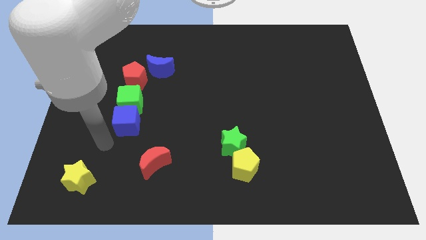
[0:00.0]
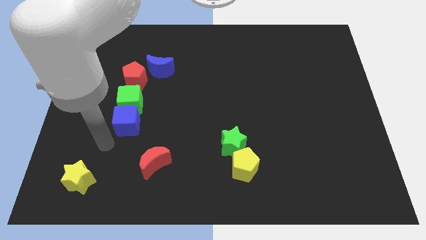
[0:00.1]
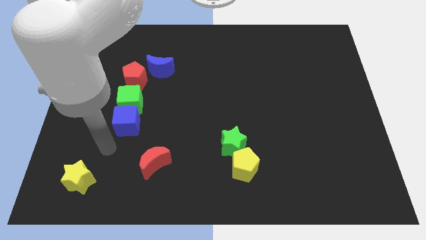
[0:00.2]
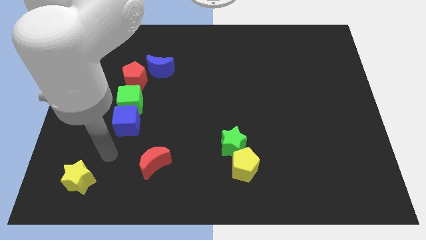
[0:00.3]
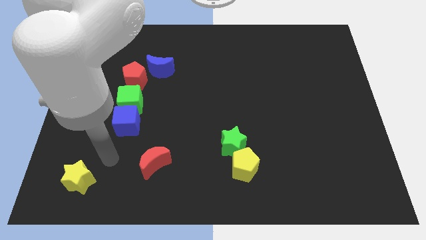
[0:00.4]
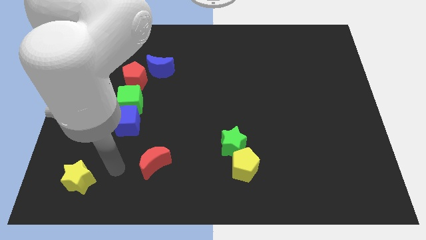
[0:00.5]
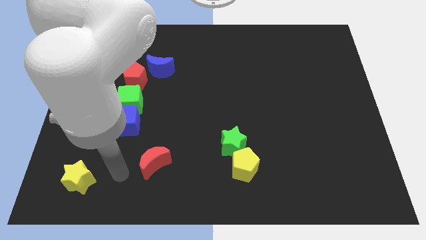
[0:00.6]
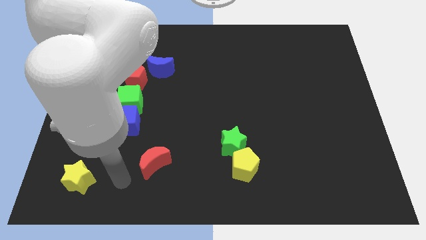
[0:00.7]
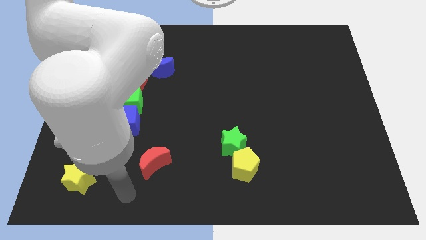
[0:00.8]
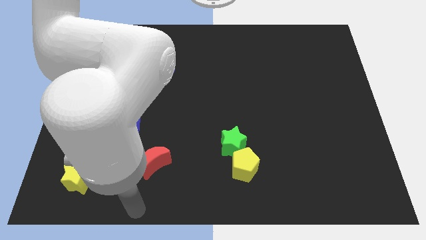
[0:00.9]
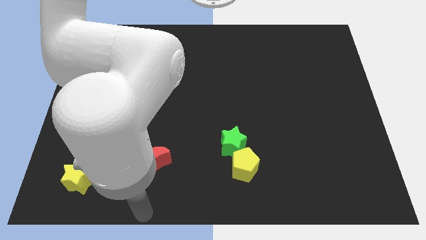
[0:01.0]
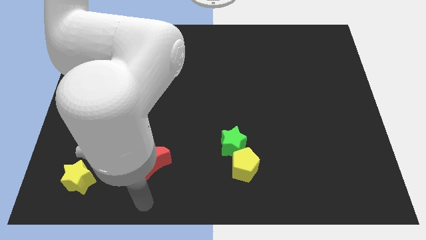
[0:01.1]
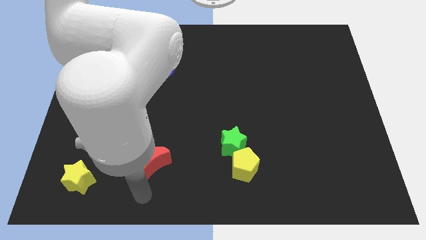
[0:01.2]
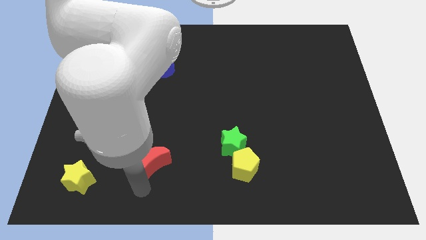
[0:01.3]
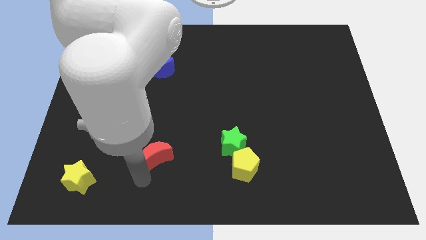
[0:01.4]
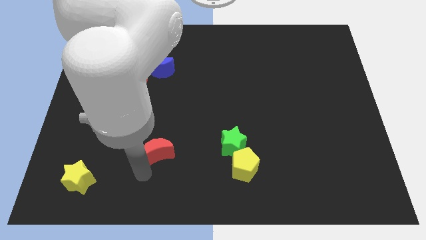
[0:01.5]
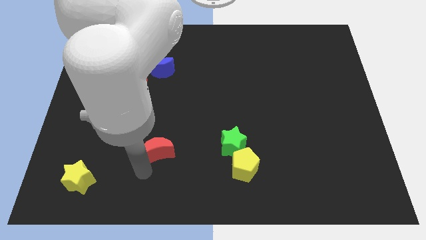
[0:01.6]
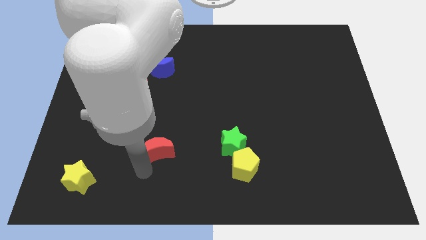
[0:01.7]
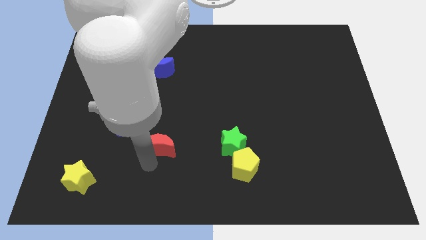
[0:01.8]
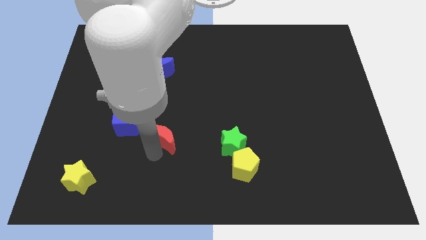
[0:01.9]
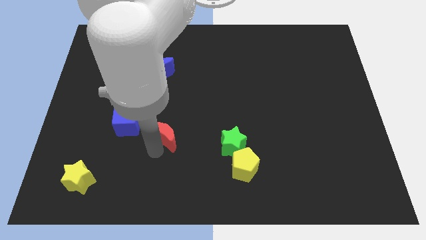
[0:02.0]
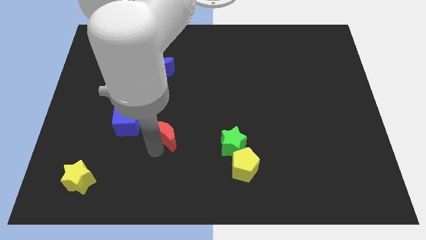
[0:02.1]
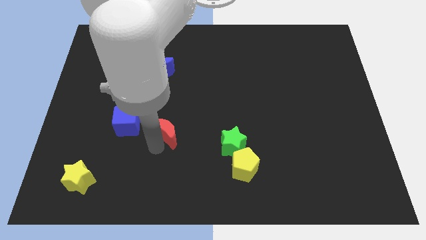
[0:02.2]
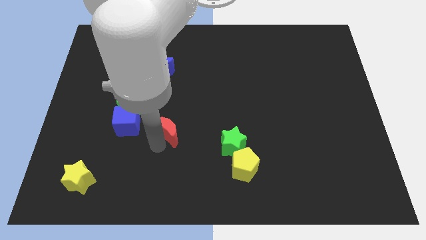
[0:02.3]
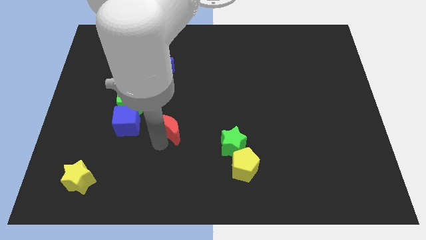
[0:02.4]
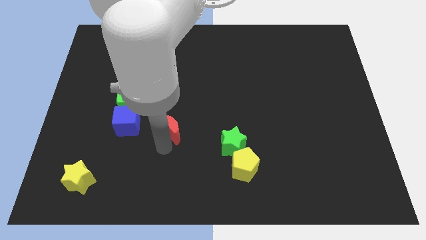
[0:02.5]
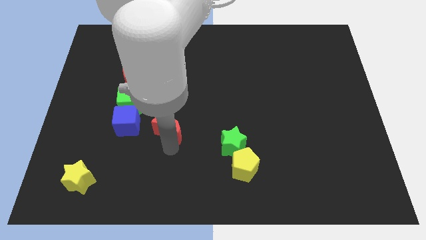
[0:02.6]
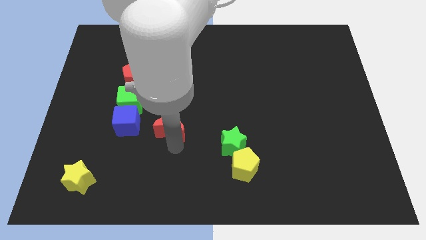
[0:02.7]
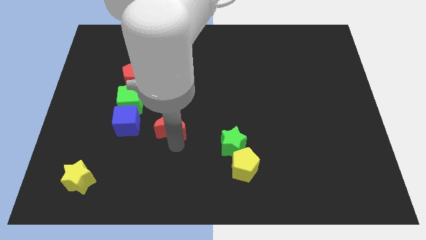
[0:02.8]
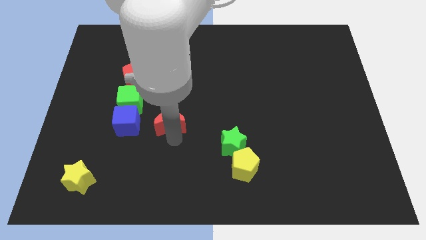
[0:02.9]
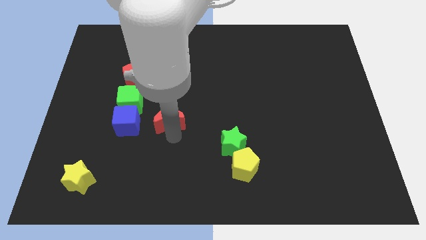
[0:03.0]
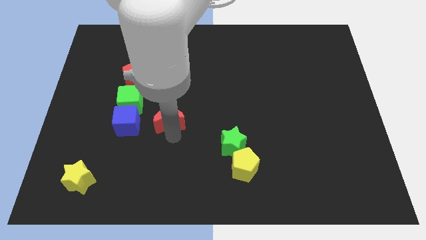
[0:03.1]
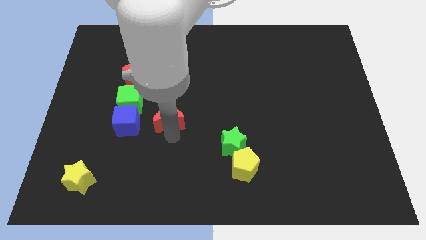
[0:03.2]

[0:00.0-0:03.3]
place the red crescent to the right of the blue cube

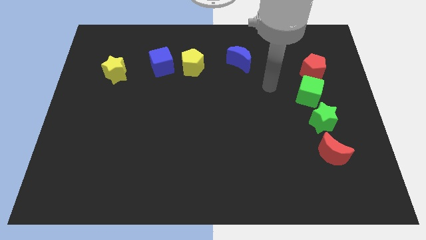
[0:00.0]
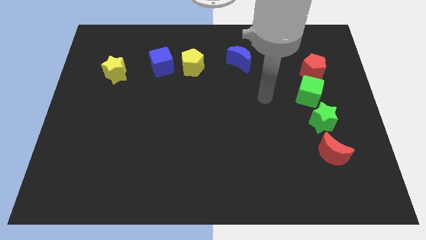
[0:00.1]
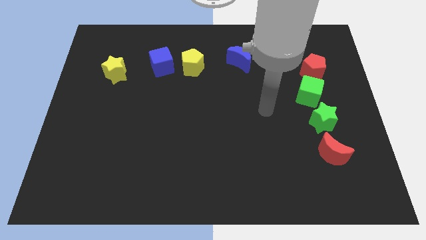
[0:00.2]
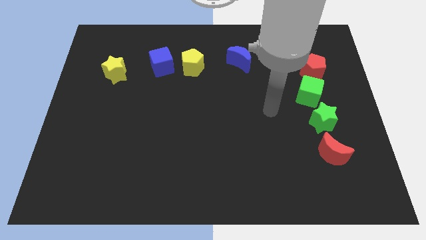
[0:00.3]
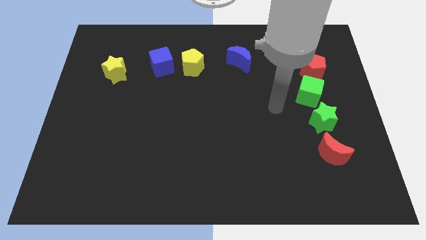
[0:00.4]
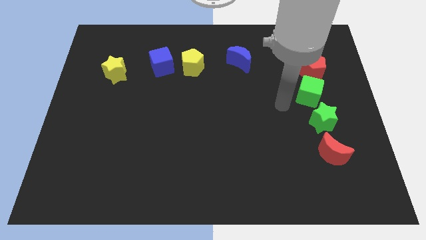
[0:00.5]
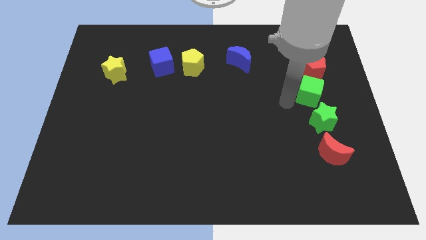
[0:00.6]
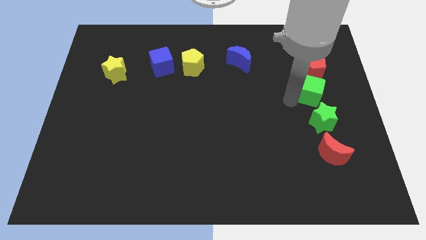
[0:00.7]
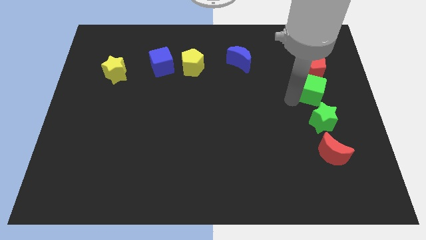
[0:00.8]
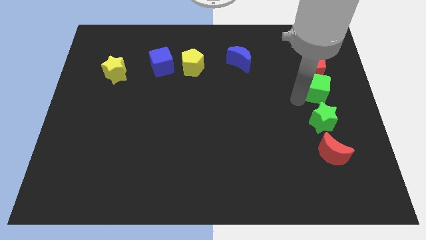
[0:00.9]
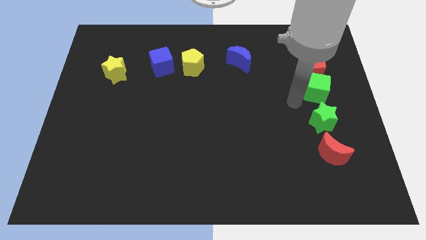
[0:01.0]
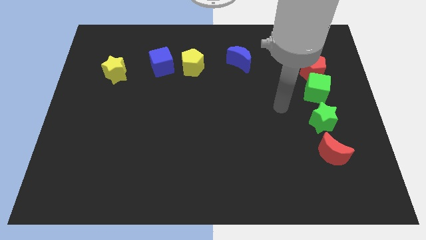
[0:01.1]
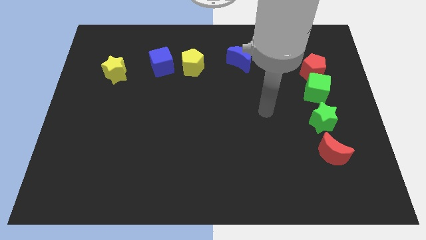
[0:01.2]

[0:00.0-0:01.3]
move the green cube to the right slightly

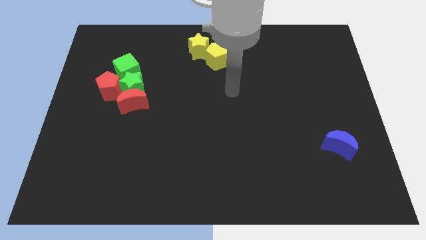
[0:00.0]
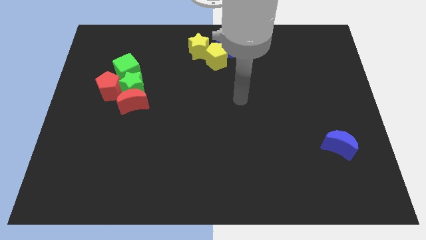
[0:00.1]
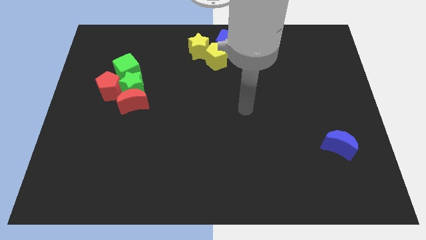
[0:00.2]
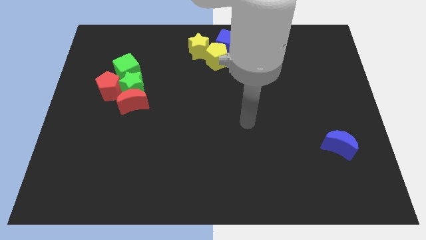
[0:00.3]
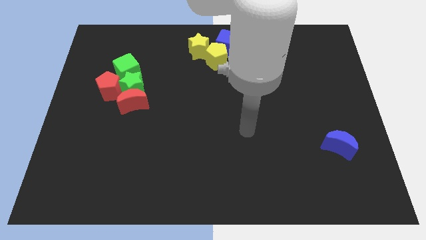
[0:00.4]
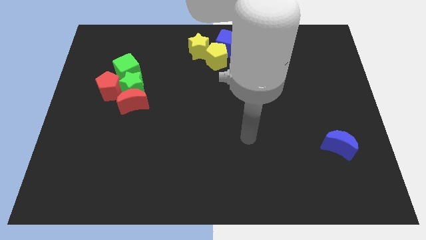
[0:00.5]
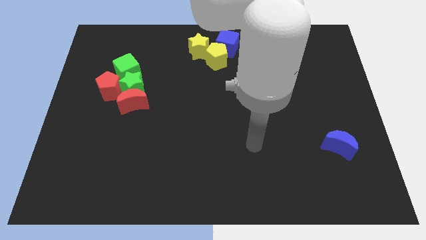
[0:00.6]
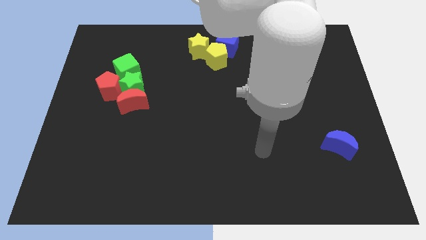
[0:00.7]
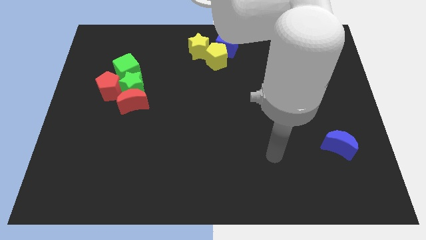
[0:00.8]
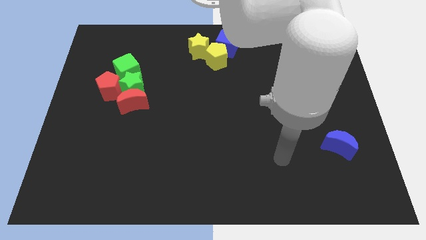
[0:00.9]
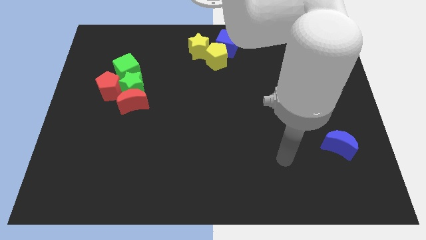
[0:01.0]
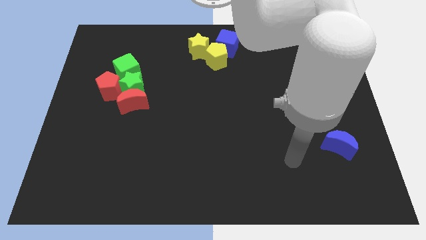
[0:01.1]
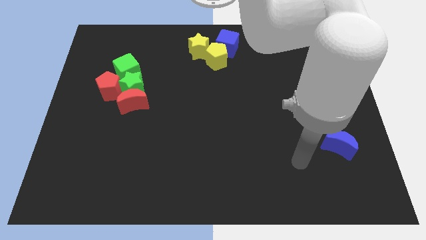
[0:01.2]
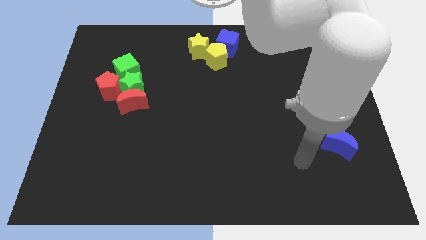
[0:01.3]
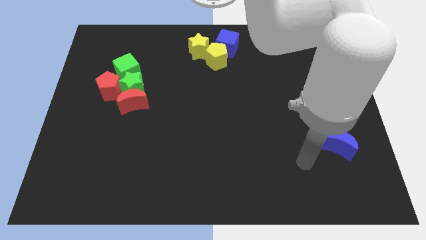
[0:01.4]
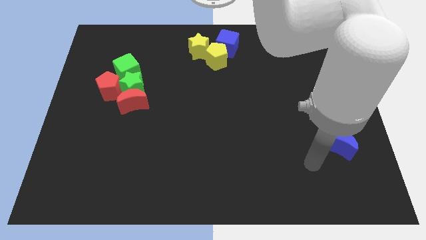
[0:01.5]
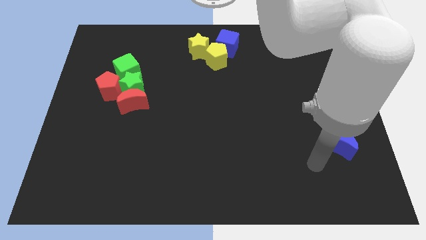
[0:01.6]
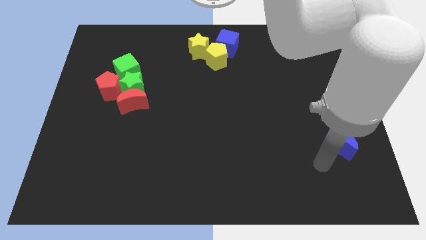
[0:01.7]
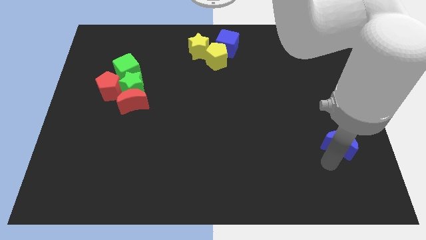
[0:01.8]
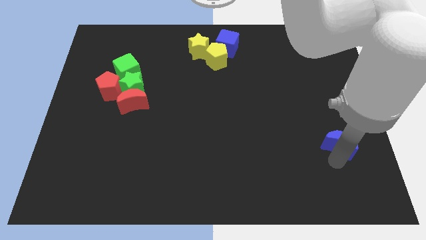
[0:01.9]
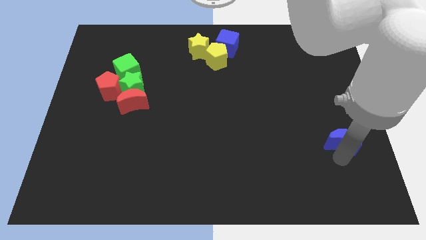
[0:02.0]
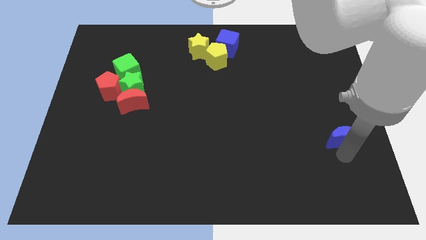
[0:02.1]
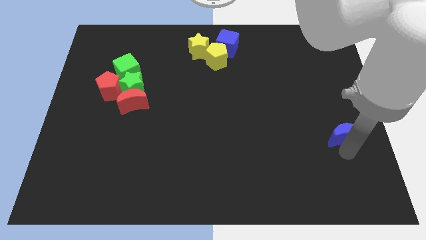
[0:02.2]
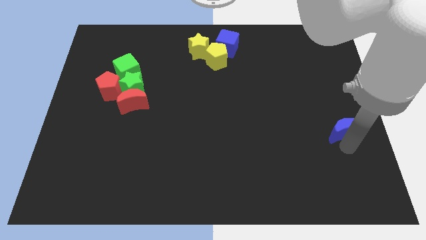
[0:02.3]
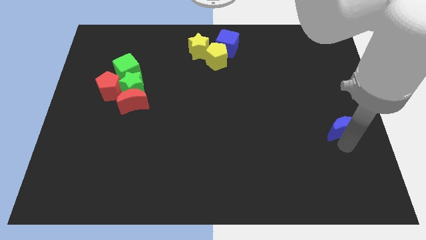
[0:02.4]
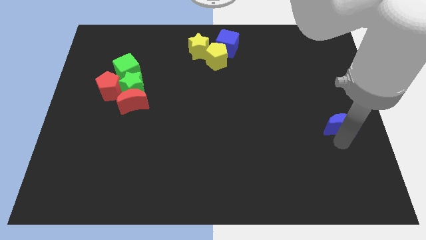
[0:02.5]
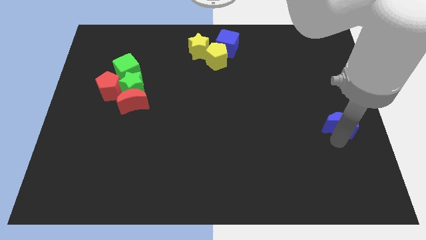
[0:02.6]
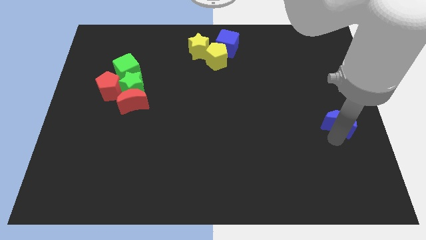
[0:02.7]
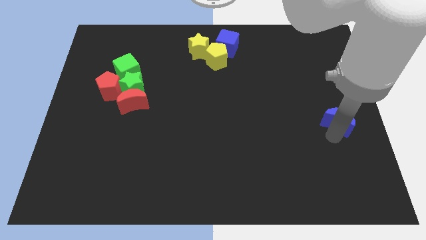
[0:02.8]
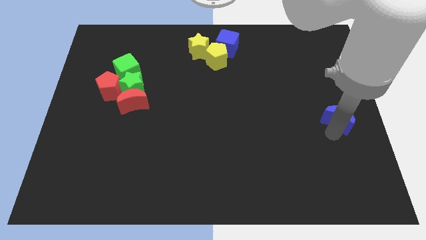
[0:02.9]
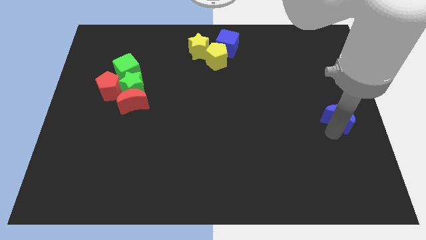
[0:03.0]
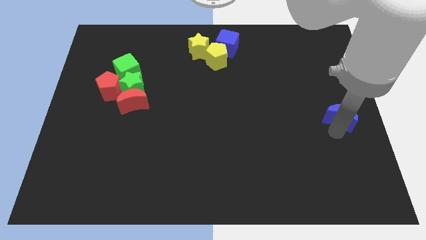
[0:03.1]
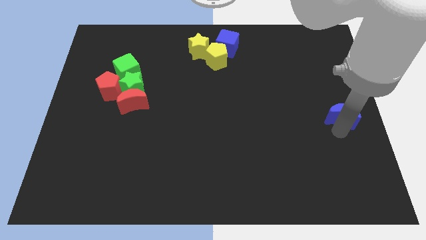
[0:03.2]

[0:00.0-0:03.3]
push the blue moon upward

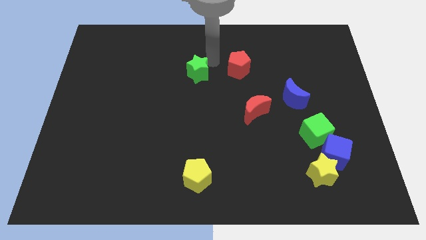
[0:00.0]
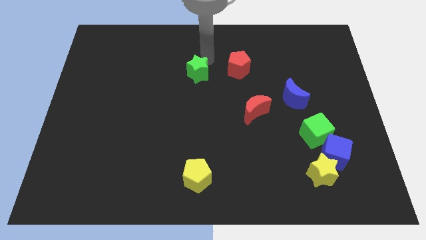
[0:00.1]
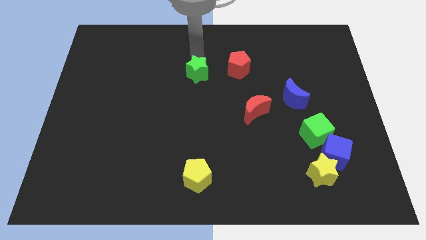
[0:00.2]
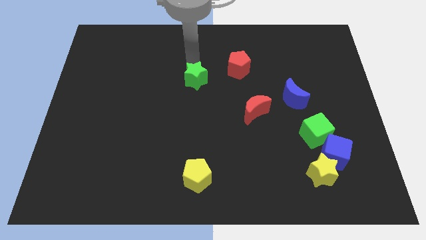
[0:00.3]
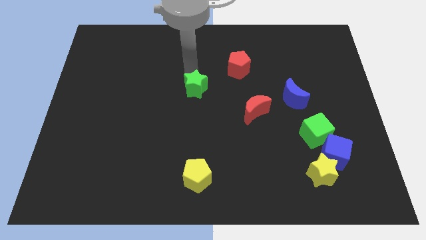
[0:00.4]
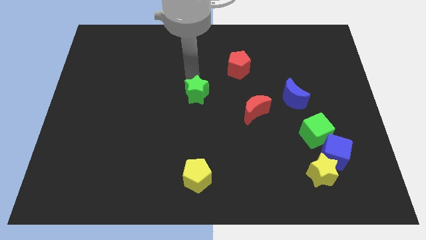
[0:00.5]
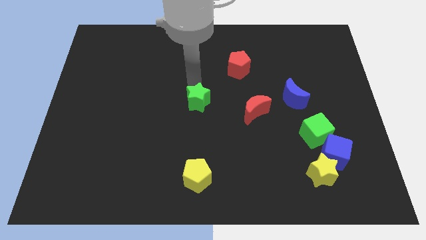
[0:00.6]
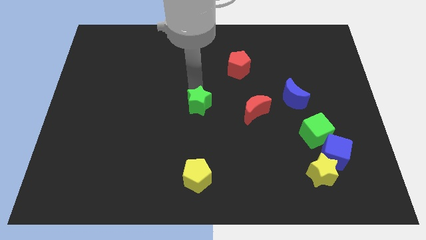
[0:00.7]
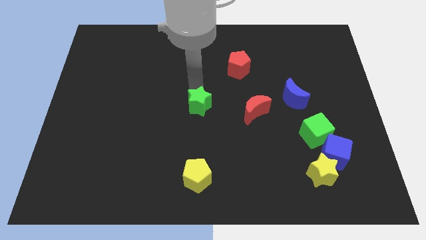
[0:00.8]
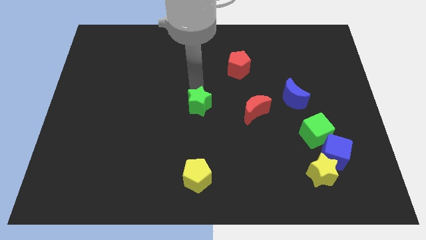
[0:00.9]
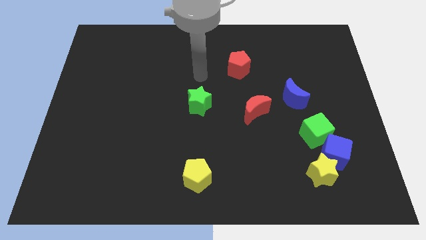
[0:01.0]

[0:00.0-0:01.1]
place the green star on top of the yellow pentagon
